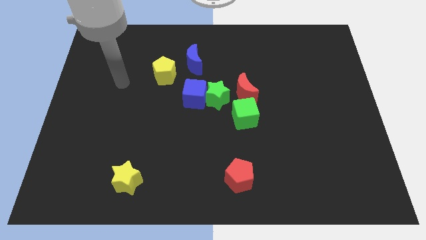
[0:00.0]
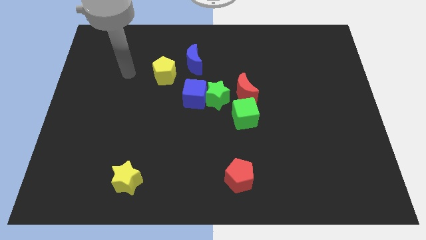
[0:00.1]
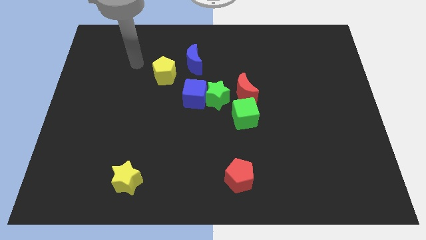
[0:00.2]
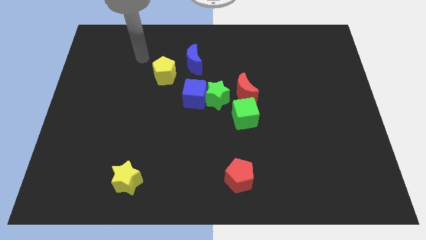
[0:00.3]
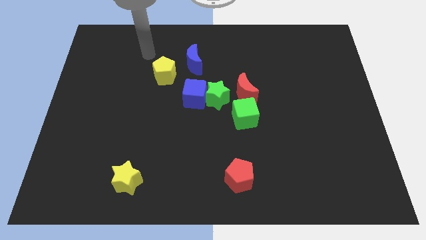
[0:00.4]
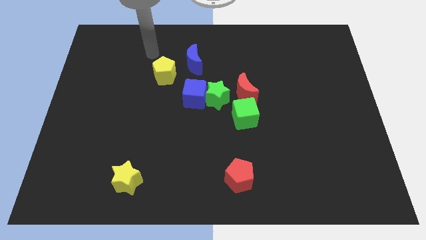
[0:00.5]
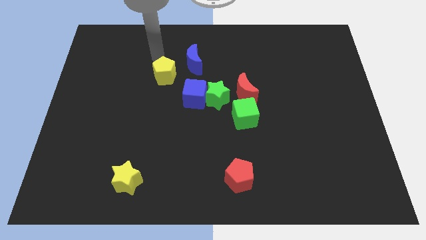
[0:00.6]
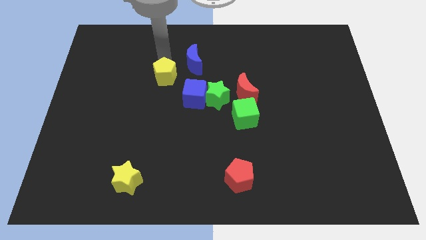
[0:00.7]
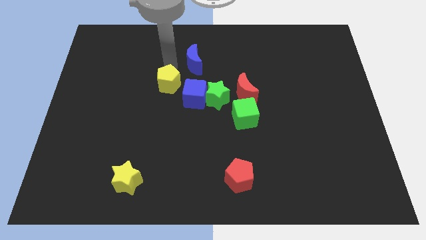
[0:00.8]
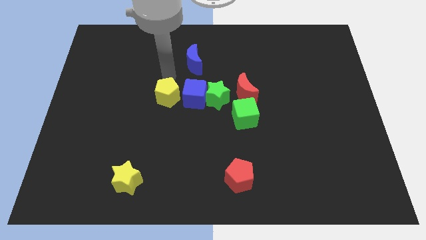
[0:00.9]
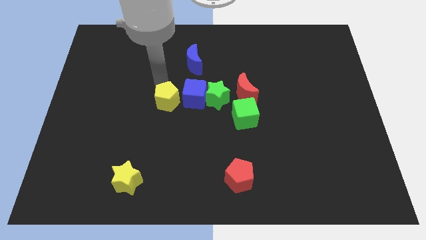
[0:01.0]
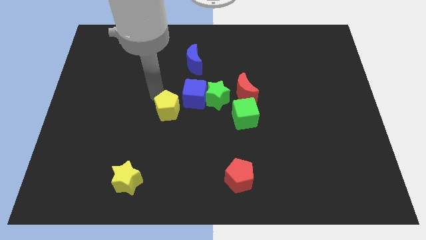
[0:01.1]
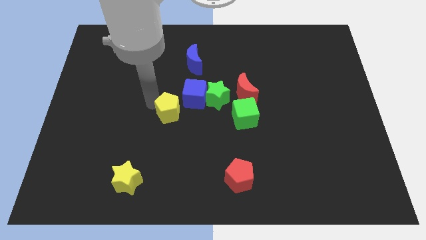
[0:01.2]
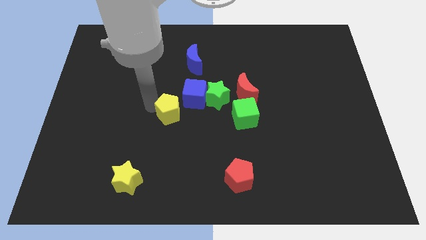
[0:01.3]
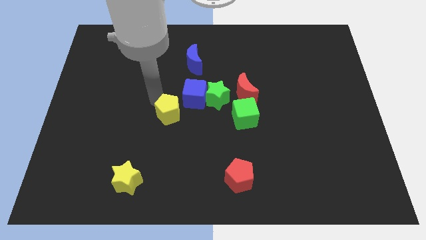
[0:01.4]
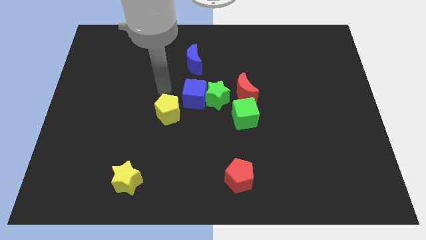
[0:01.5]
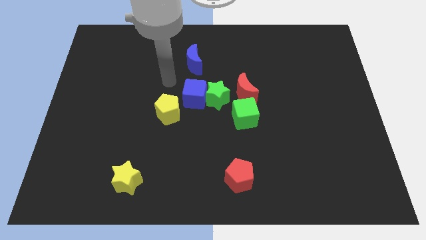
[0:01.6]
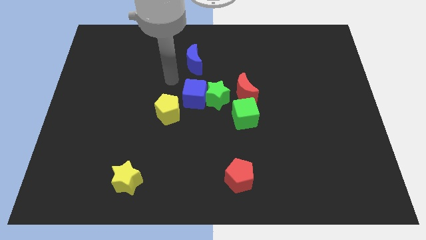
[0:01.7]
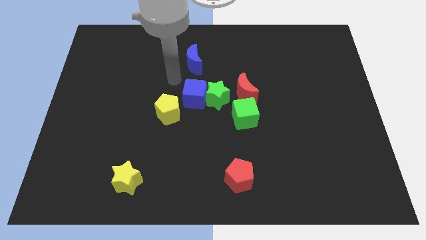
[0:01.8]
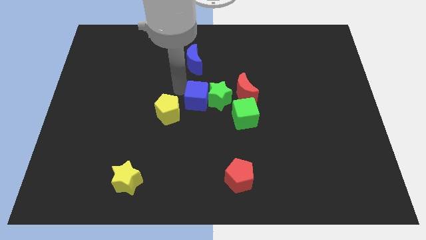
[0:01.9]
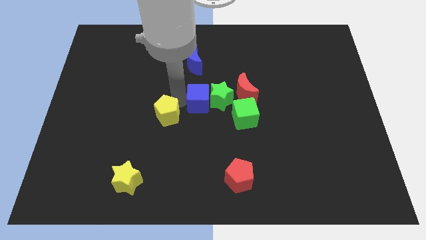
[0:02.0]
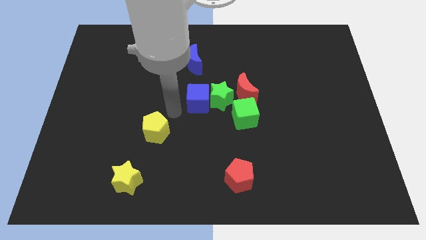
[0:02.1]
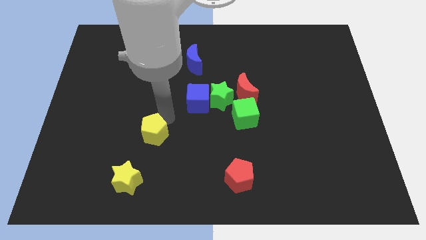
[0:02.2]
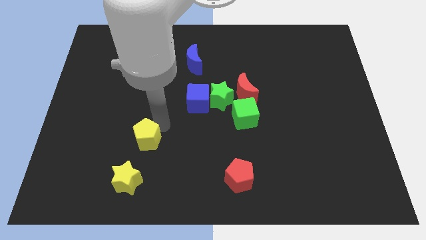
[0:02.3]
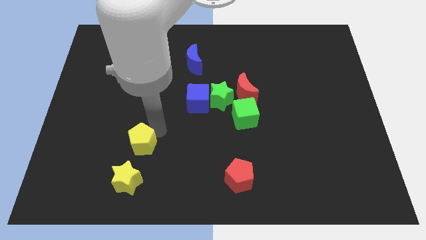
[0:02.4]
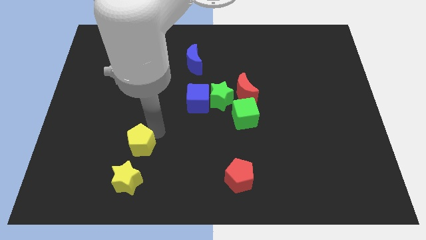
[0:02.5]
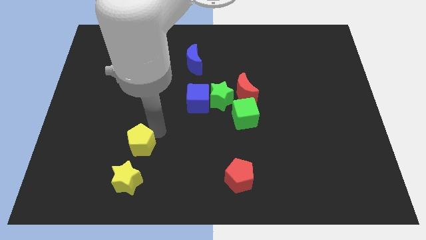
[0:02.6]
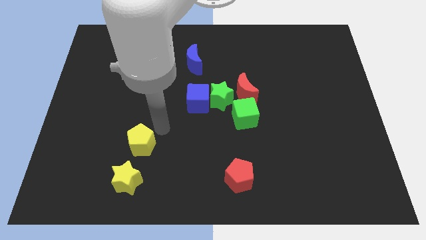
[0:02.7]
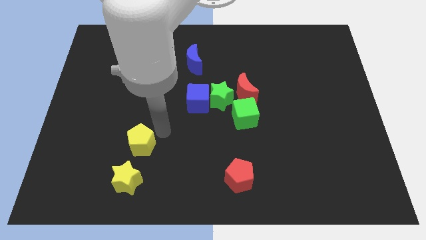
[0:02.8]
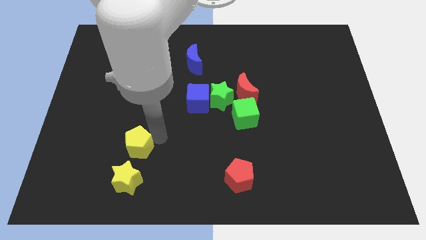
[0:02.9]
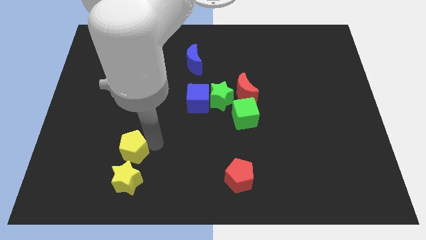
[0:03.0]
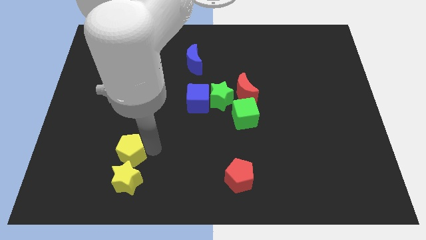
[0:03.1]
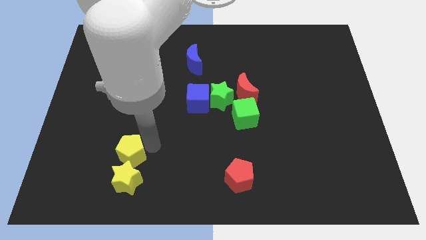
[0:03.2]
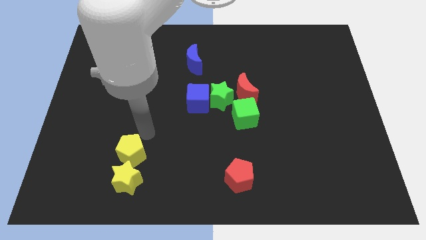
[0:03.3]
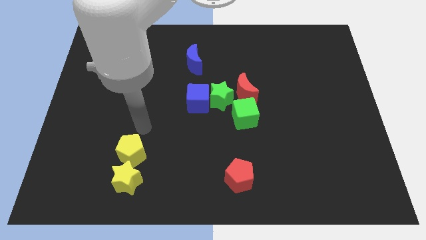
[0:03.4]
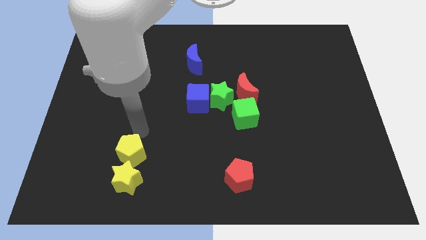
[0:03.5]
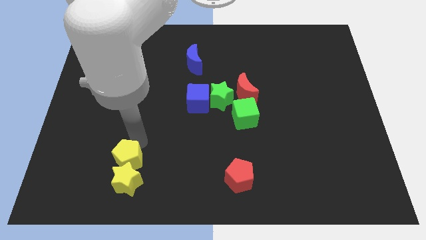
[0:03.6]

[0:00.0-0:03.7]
push the yellow pentagon towards yellow star

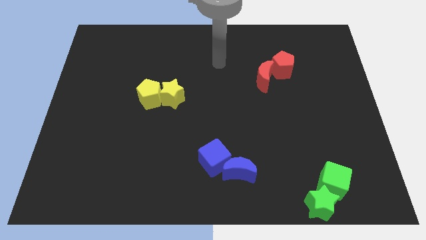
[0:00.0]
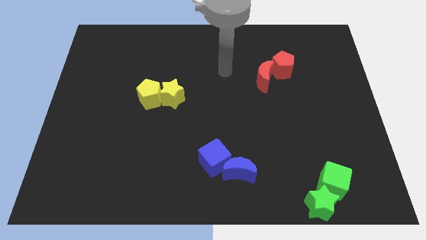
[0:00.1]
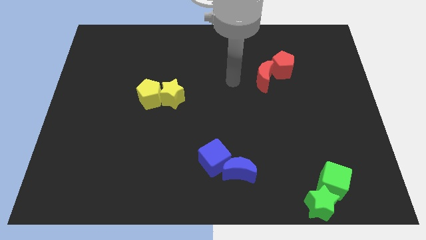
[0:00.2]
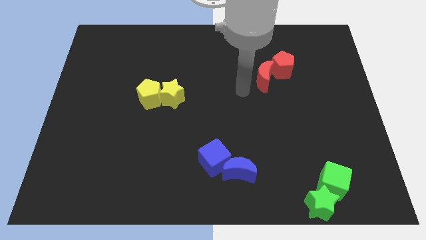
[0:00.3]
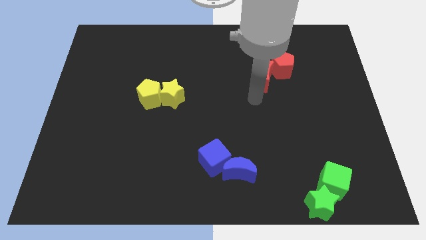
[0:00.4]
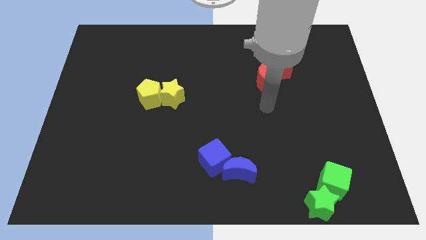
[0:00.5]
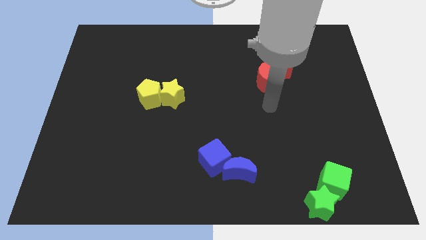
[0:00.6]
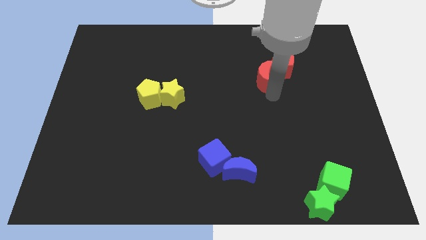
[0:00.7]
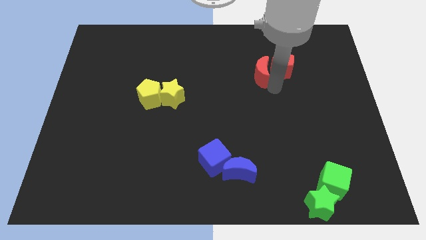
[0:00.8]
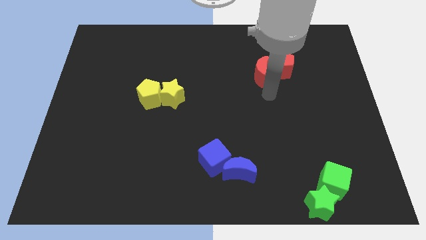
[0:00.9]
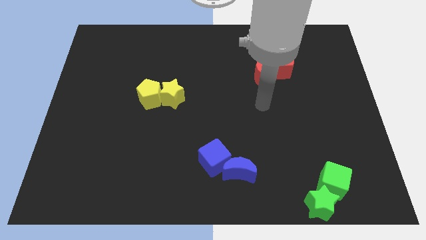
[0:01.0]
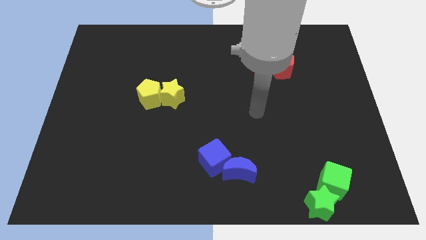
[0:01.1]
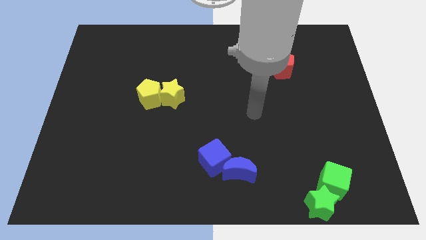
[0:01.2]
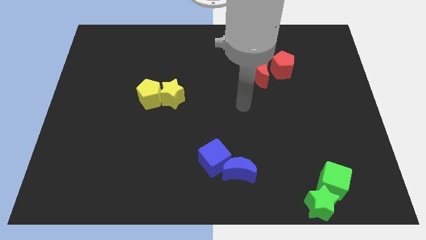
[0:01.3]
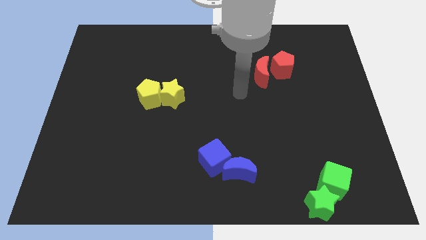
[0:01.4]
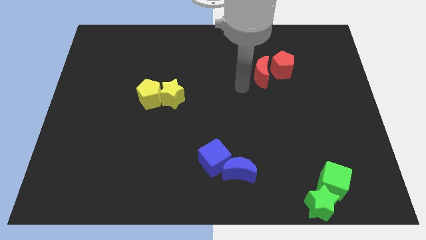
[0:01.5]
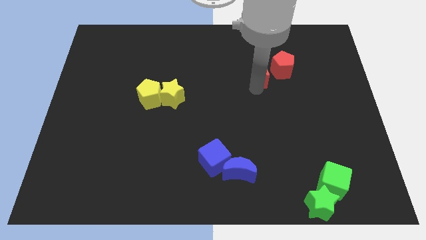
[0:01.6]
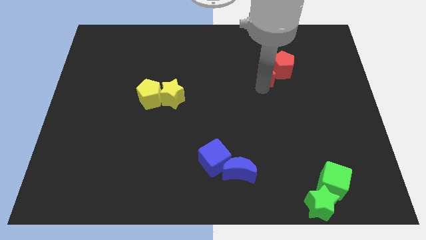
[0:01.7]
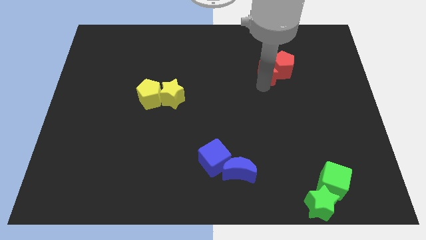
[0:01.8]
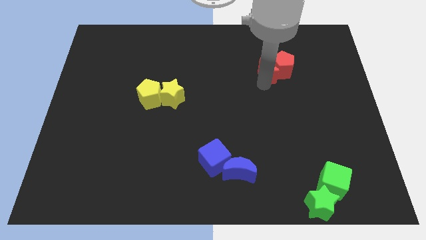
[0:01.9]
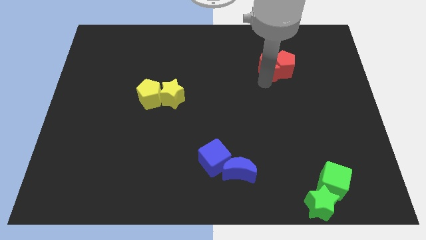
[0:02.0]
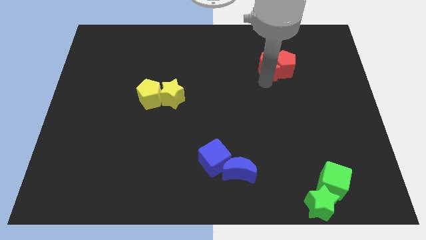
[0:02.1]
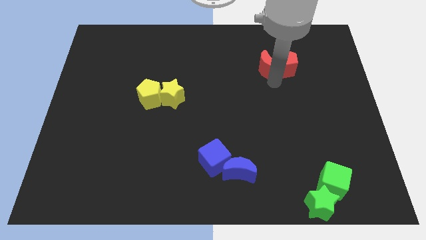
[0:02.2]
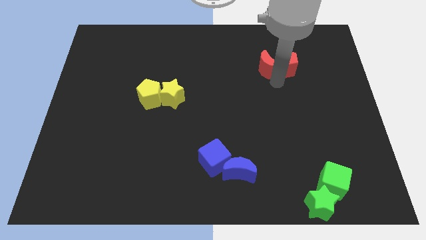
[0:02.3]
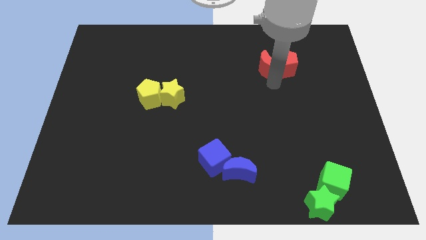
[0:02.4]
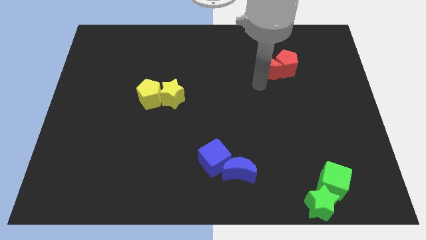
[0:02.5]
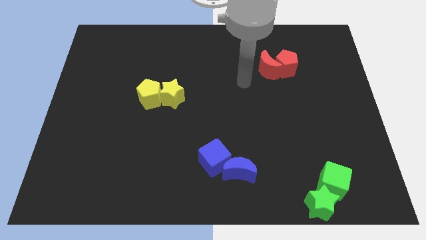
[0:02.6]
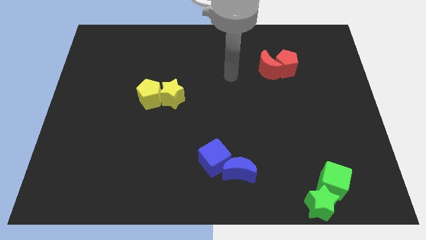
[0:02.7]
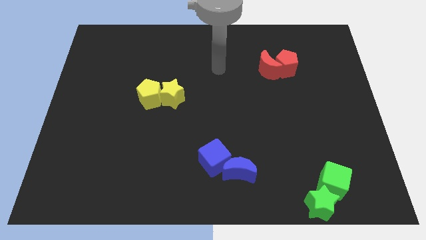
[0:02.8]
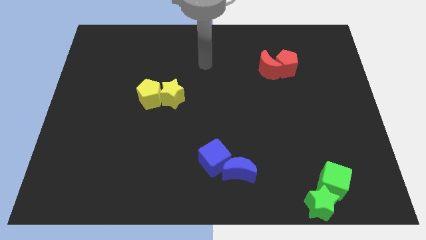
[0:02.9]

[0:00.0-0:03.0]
slightly push the red moon to the top

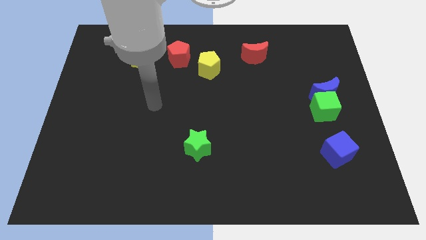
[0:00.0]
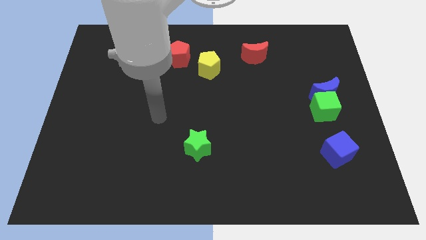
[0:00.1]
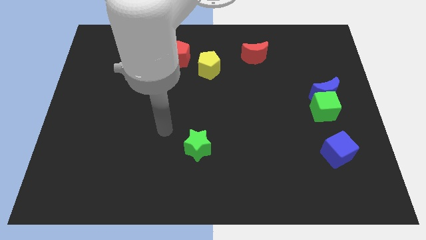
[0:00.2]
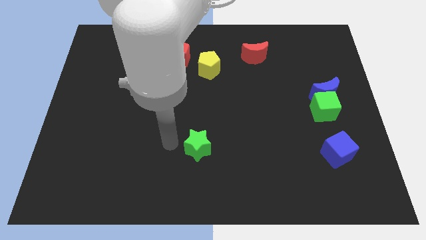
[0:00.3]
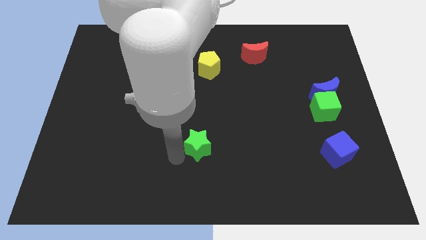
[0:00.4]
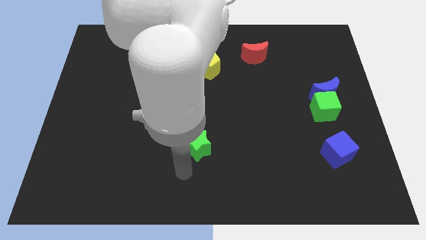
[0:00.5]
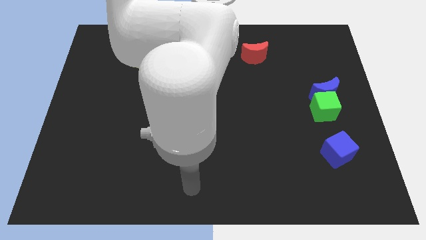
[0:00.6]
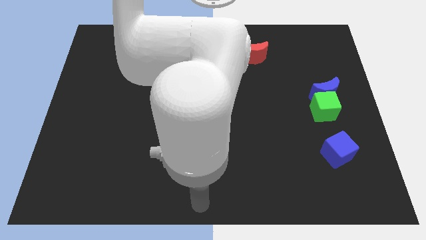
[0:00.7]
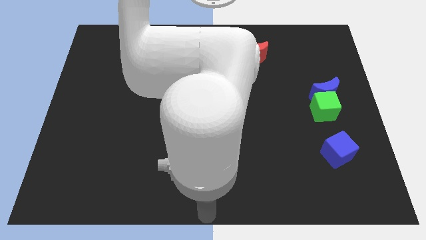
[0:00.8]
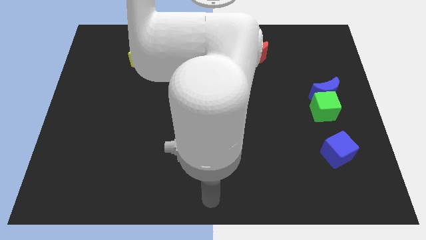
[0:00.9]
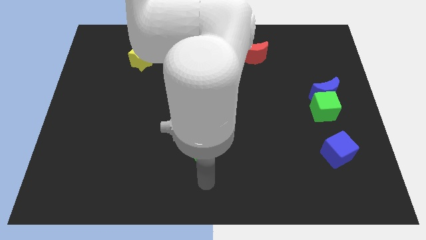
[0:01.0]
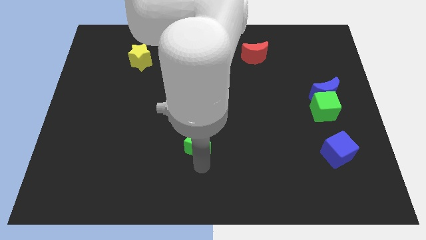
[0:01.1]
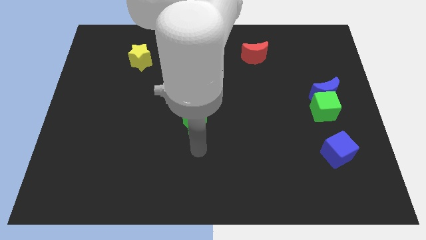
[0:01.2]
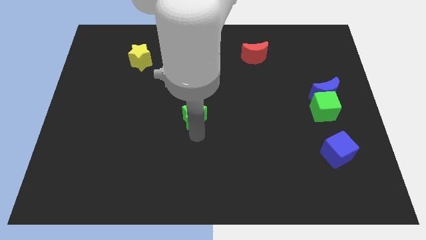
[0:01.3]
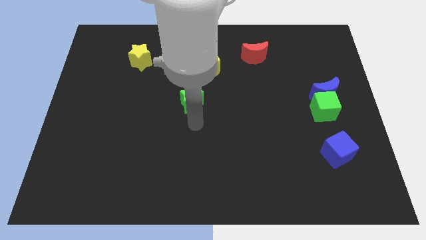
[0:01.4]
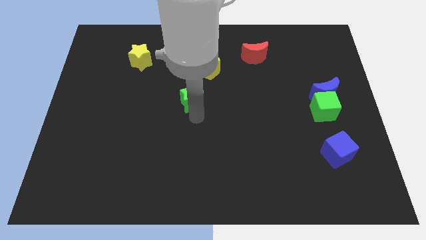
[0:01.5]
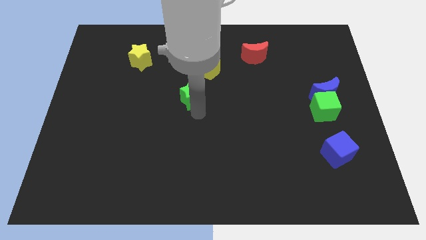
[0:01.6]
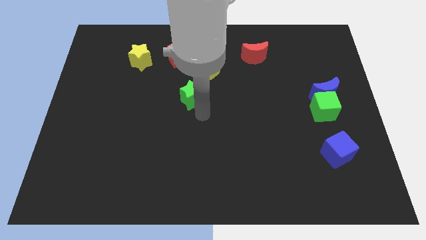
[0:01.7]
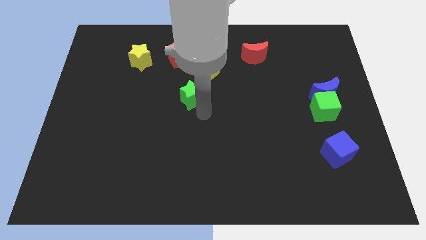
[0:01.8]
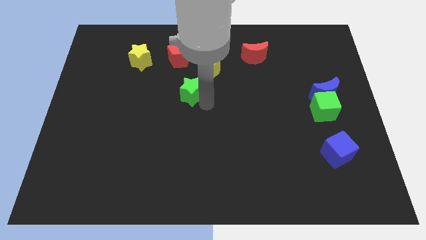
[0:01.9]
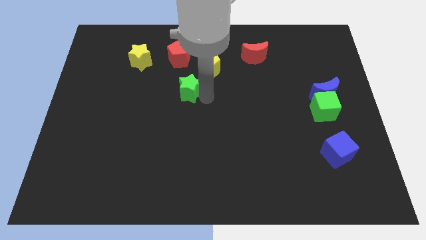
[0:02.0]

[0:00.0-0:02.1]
push the green star to the bottom right side of the red pentagon

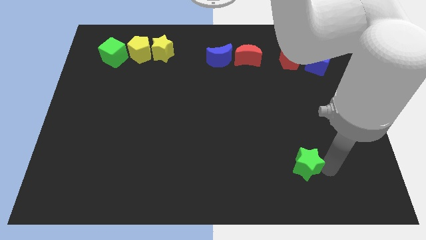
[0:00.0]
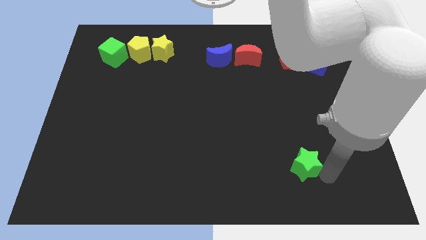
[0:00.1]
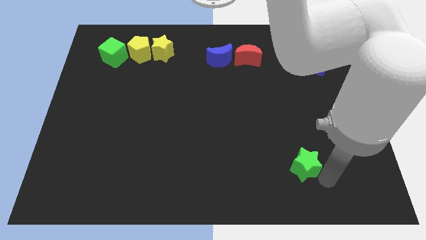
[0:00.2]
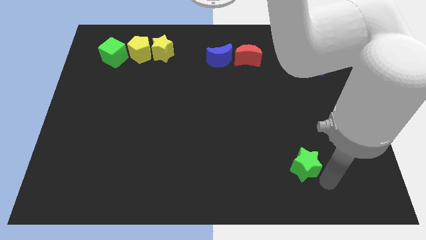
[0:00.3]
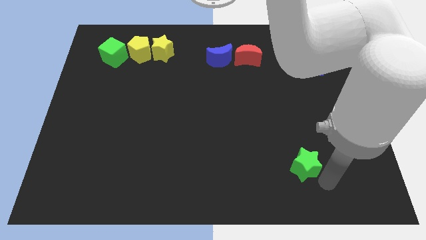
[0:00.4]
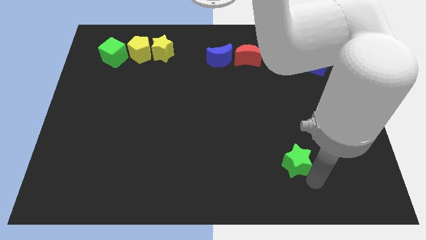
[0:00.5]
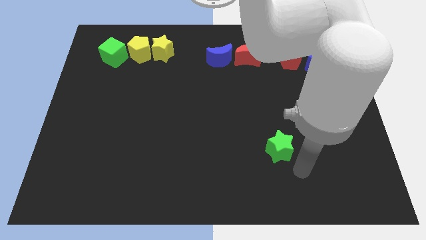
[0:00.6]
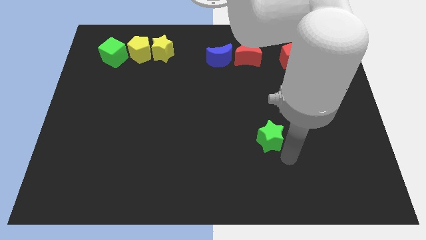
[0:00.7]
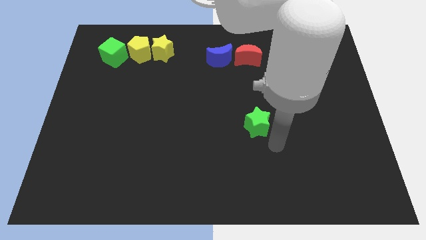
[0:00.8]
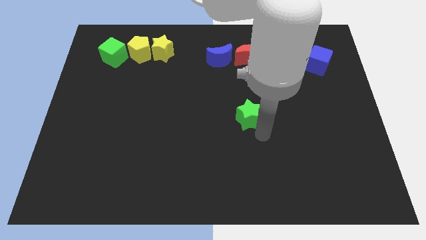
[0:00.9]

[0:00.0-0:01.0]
move the green star towards the center of the board
